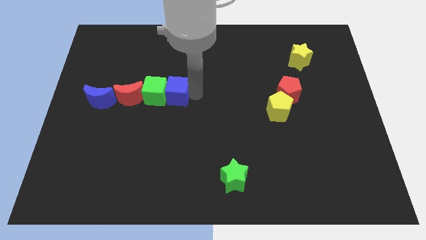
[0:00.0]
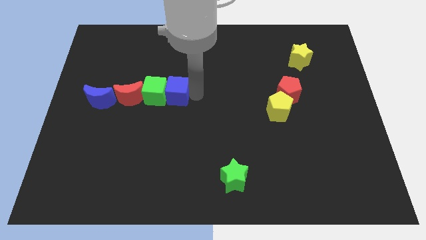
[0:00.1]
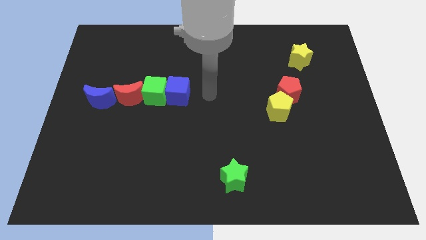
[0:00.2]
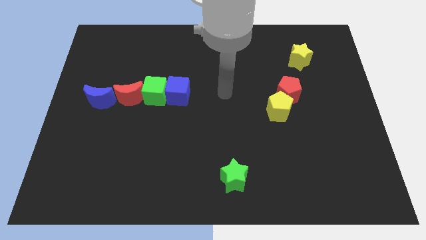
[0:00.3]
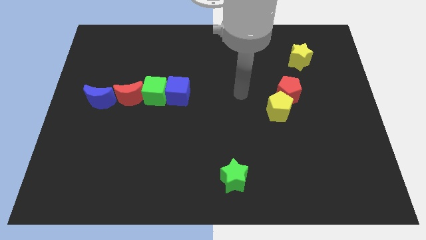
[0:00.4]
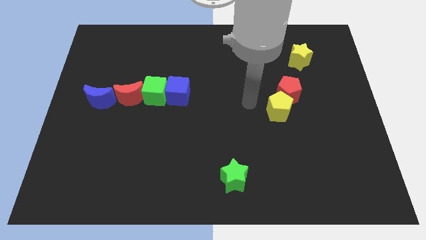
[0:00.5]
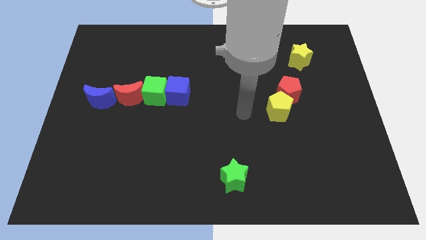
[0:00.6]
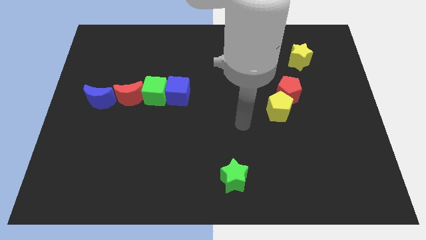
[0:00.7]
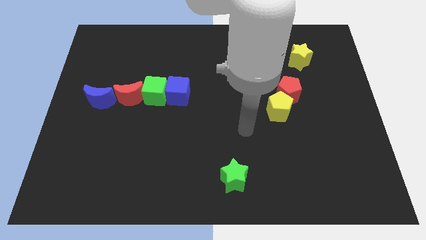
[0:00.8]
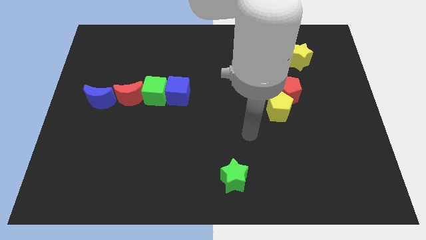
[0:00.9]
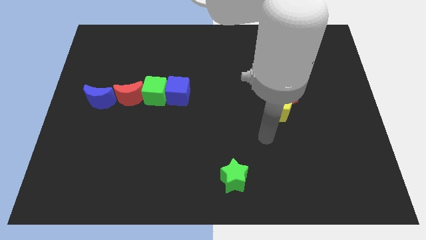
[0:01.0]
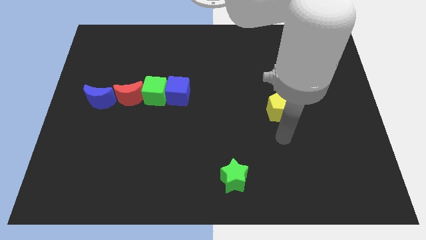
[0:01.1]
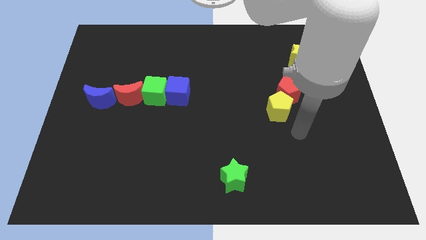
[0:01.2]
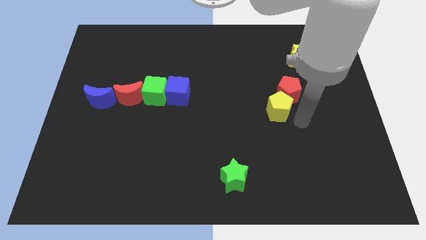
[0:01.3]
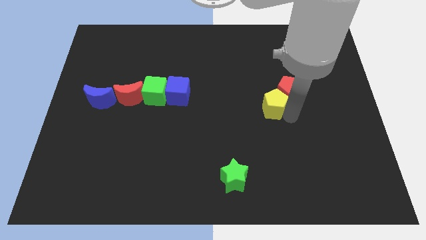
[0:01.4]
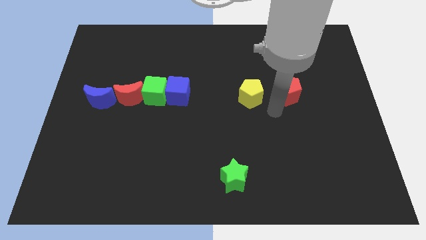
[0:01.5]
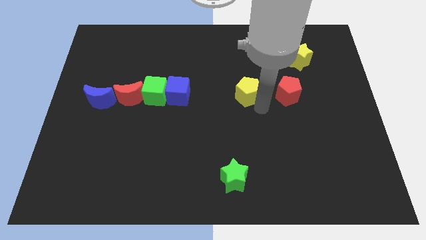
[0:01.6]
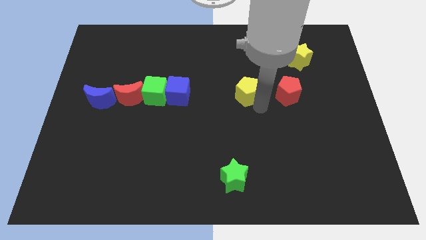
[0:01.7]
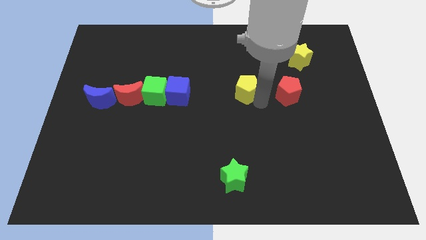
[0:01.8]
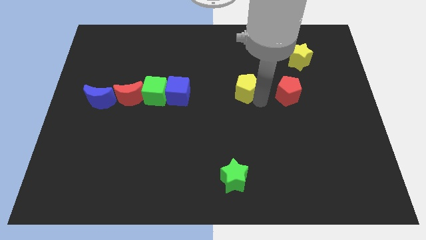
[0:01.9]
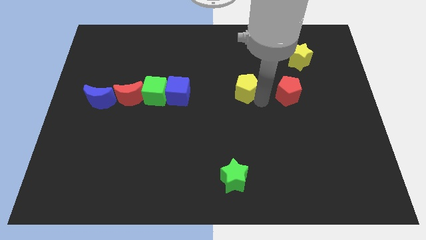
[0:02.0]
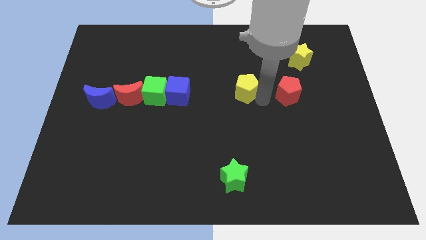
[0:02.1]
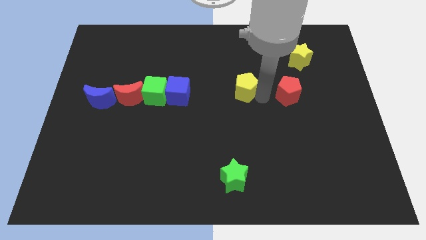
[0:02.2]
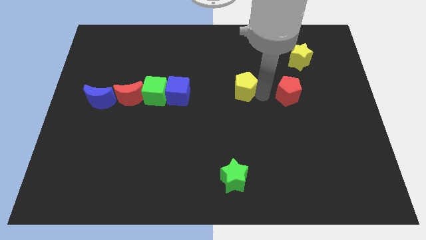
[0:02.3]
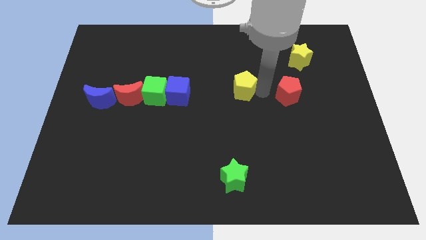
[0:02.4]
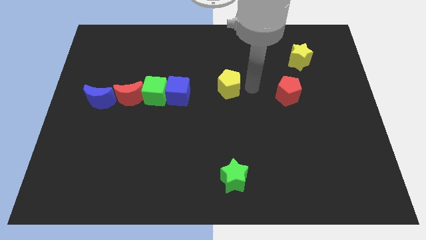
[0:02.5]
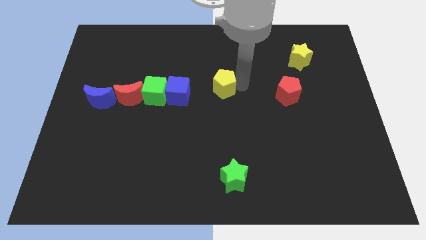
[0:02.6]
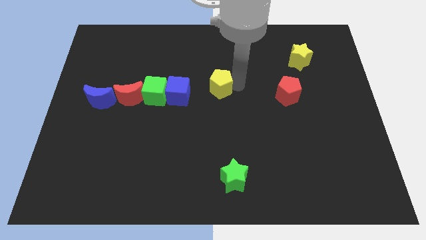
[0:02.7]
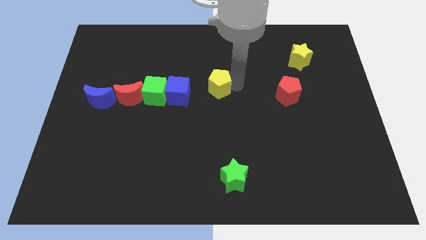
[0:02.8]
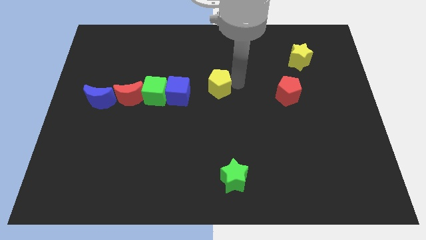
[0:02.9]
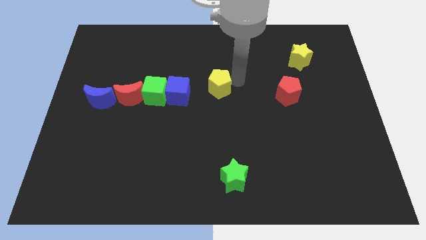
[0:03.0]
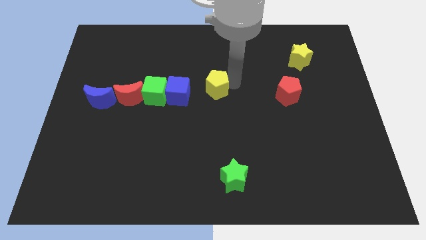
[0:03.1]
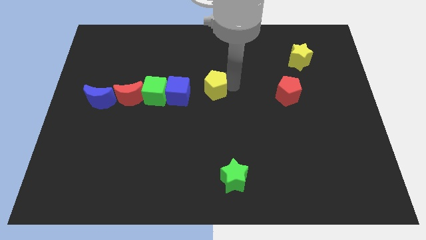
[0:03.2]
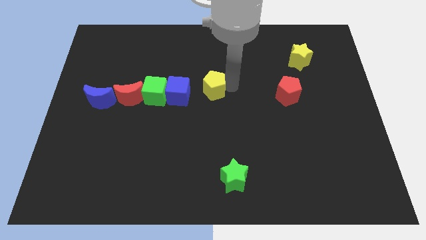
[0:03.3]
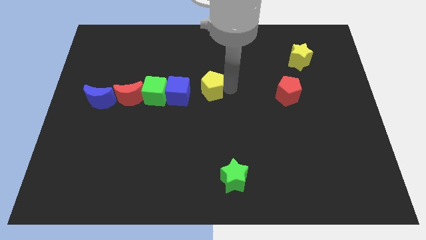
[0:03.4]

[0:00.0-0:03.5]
place the yellow pentagon diagonally on the top left side of the green star

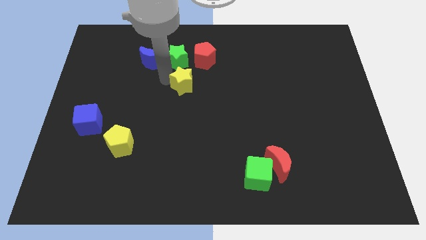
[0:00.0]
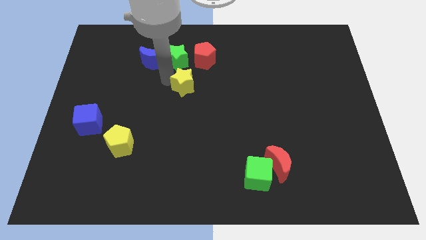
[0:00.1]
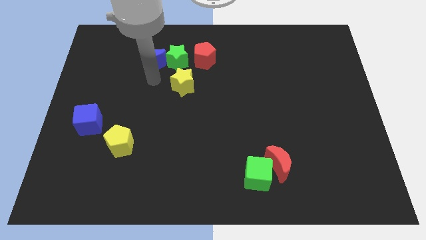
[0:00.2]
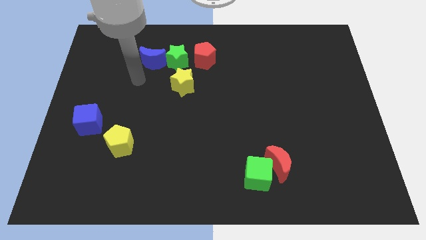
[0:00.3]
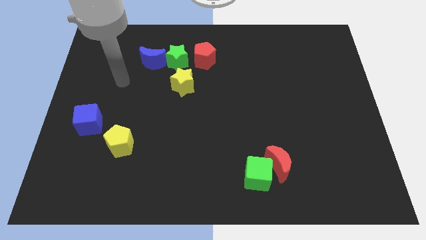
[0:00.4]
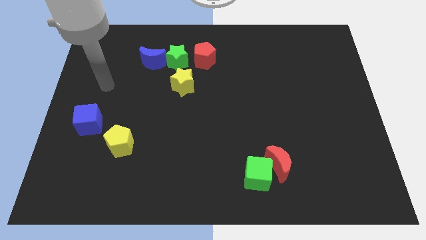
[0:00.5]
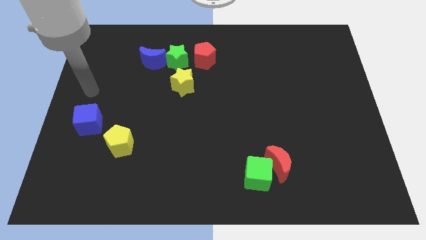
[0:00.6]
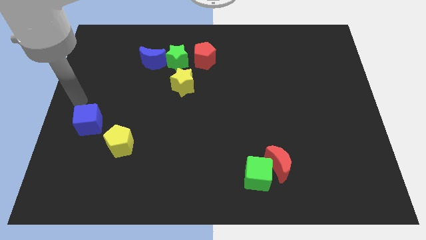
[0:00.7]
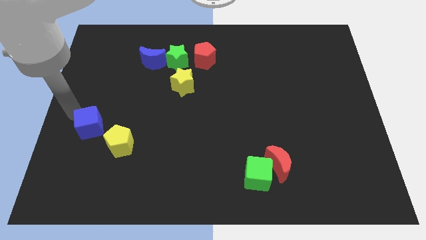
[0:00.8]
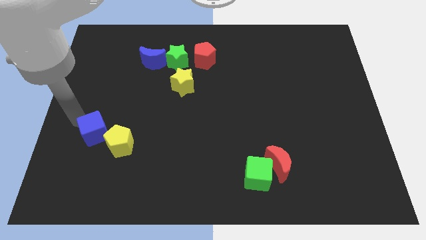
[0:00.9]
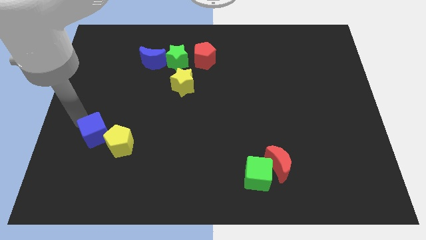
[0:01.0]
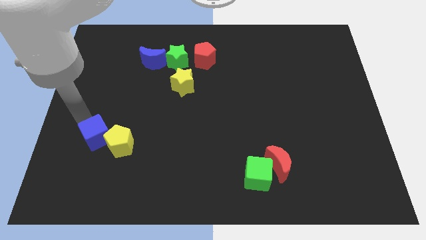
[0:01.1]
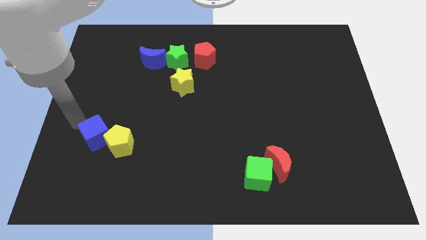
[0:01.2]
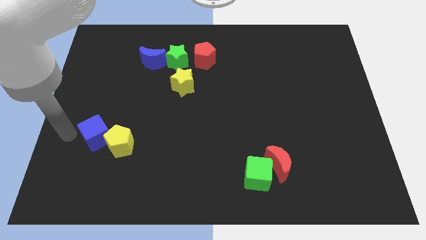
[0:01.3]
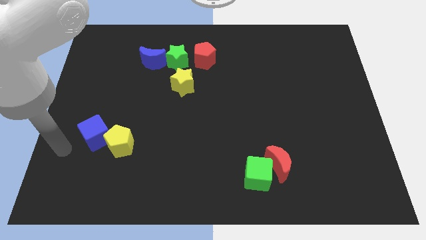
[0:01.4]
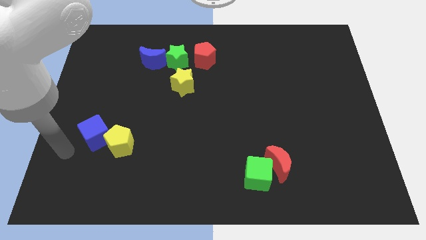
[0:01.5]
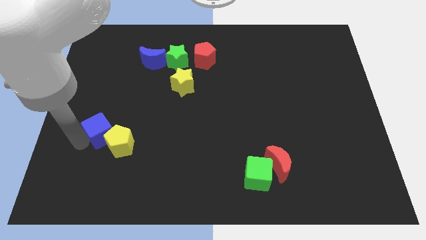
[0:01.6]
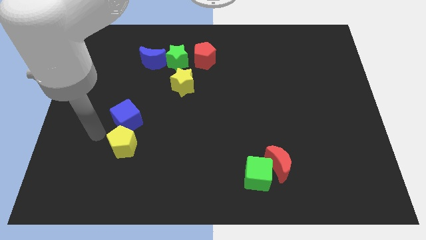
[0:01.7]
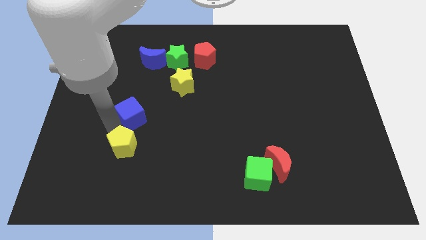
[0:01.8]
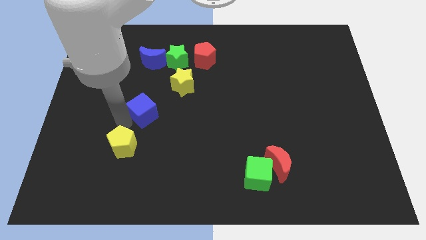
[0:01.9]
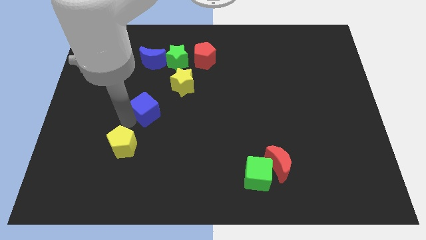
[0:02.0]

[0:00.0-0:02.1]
push the blue cube towards the yellow star

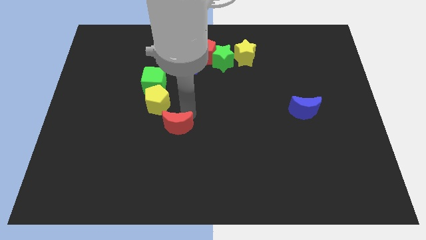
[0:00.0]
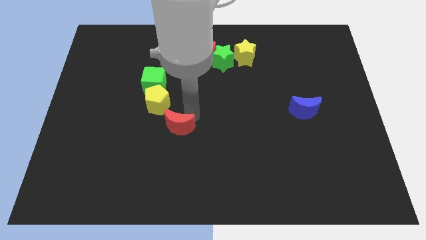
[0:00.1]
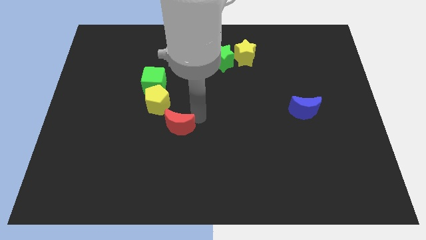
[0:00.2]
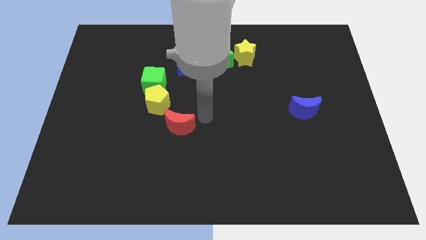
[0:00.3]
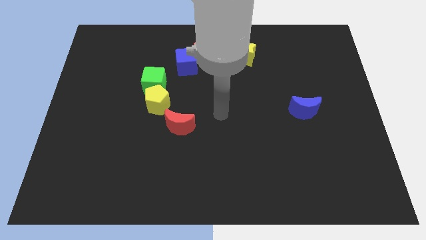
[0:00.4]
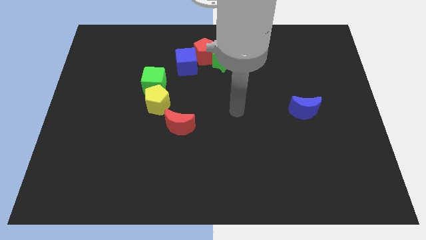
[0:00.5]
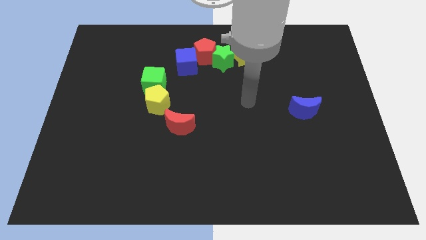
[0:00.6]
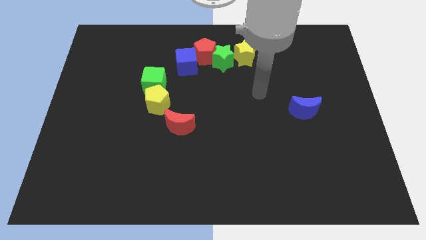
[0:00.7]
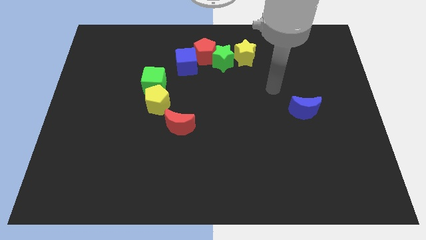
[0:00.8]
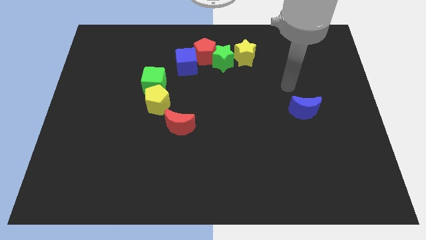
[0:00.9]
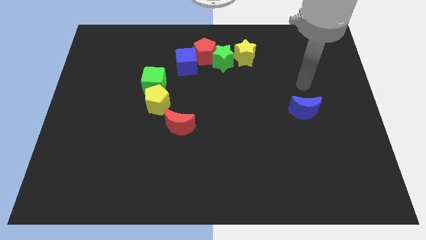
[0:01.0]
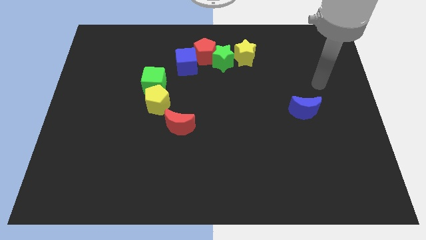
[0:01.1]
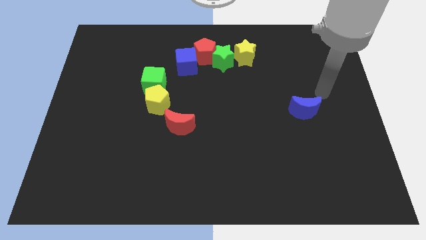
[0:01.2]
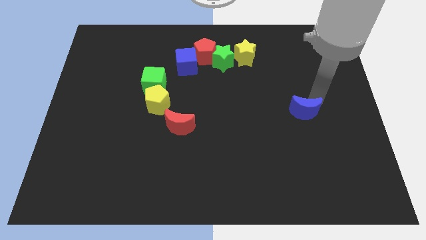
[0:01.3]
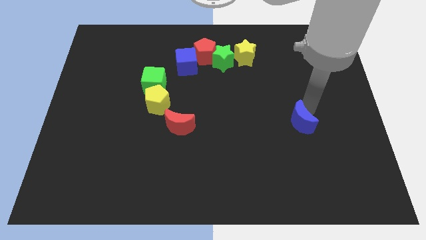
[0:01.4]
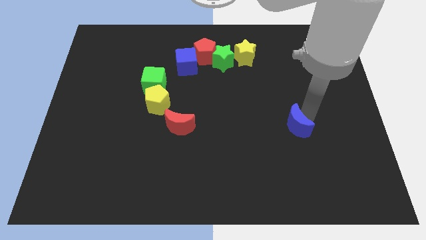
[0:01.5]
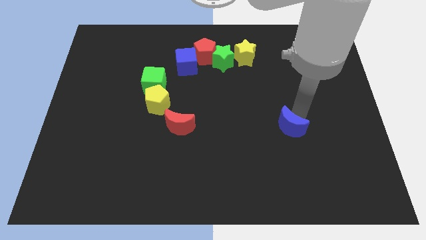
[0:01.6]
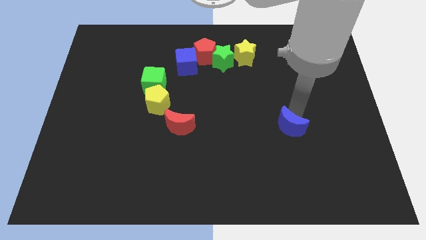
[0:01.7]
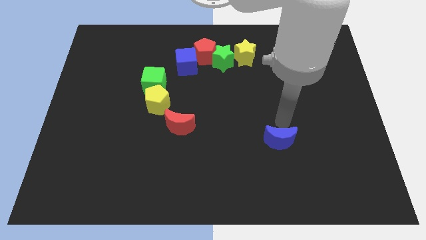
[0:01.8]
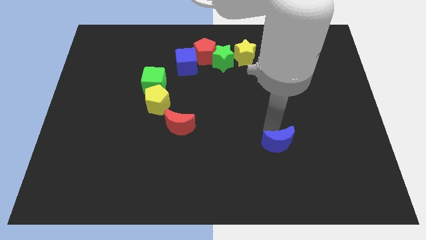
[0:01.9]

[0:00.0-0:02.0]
slide the blue moon downwards right to the board

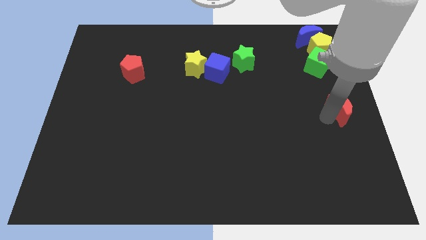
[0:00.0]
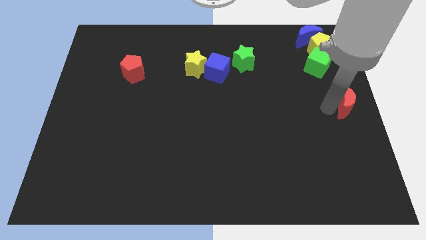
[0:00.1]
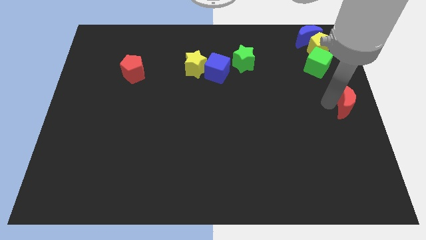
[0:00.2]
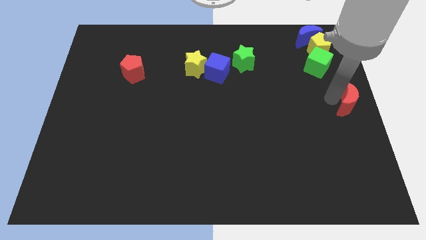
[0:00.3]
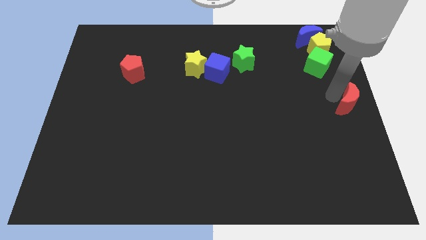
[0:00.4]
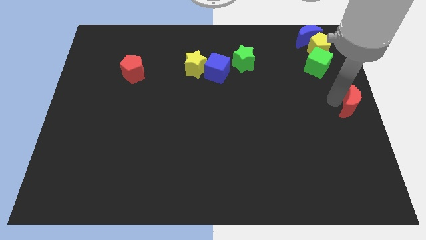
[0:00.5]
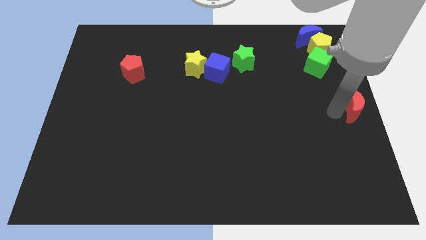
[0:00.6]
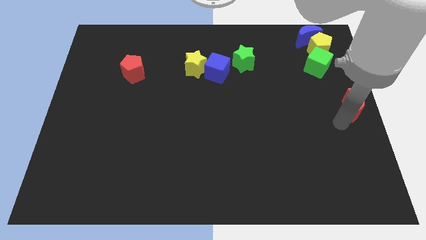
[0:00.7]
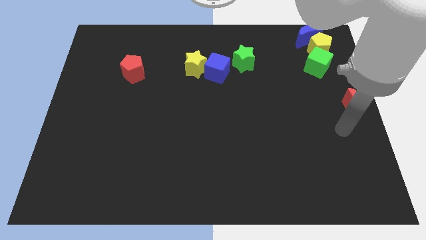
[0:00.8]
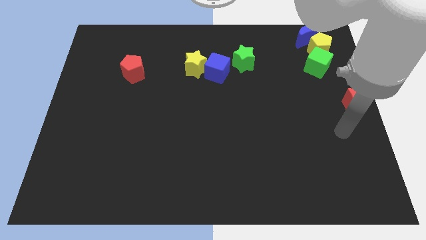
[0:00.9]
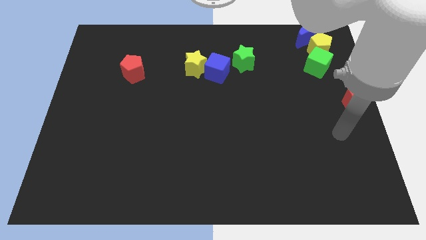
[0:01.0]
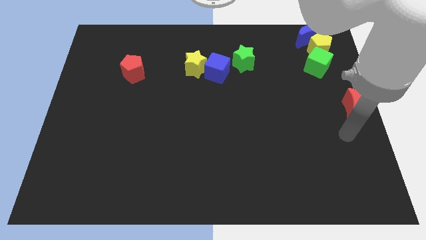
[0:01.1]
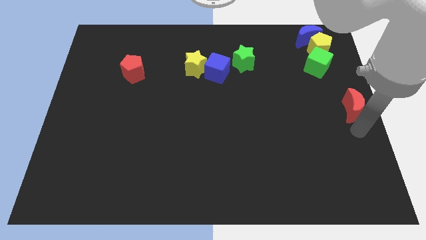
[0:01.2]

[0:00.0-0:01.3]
place red crescent to the right center of the board

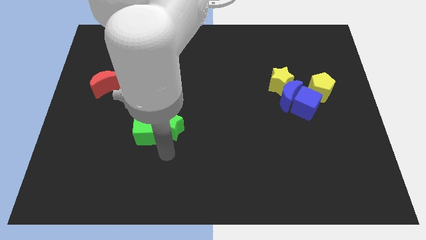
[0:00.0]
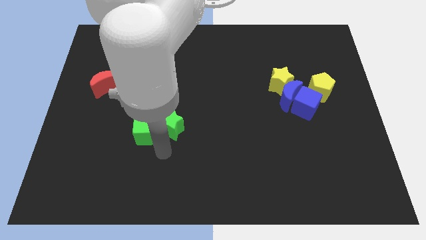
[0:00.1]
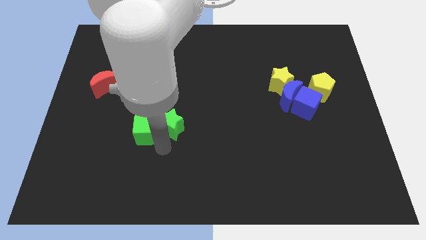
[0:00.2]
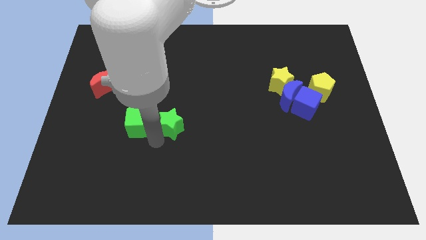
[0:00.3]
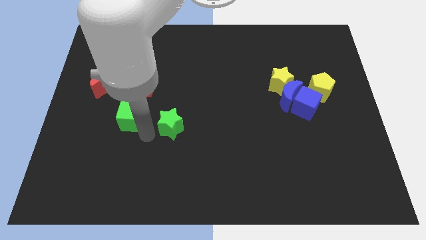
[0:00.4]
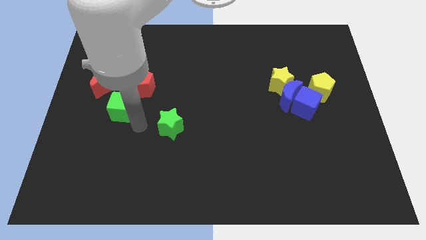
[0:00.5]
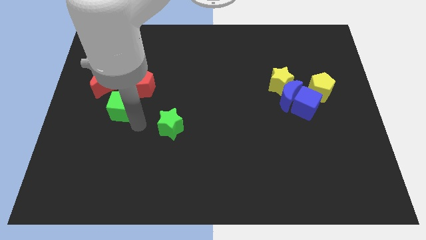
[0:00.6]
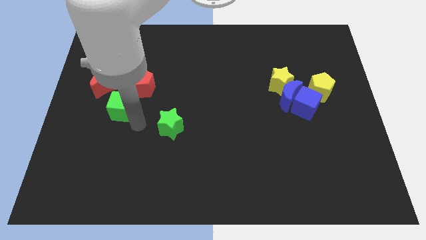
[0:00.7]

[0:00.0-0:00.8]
separate the green cube and green star
